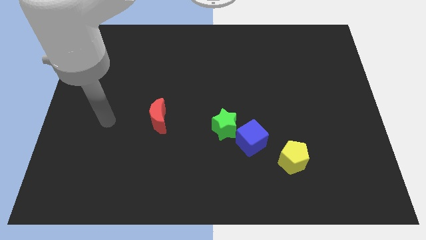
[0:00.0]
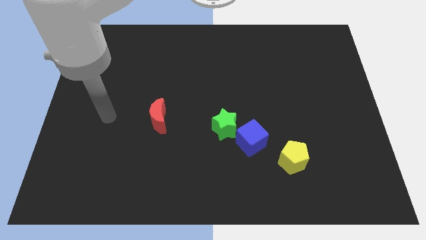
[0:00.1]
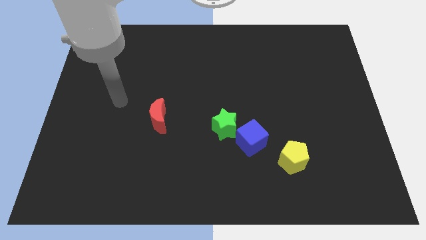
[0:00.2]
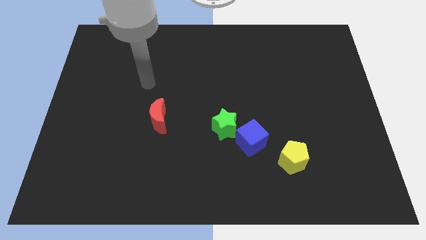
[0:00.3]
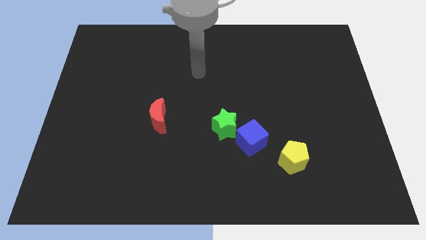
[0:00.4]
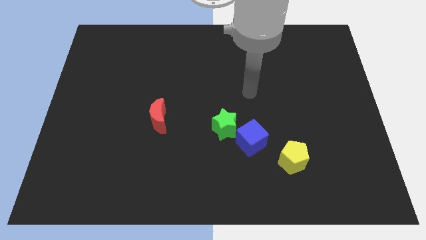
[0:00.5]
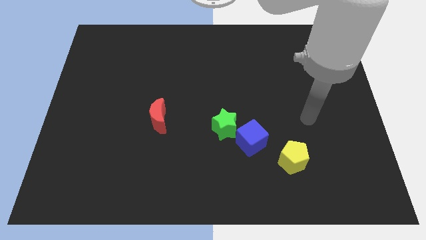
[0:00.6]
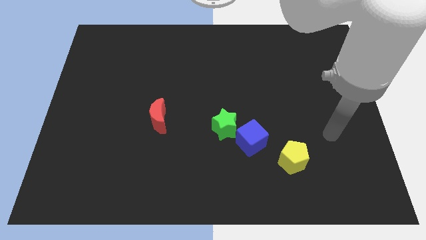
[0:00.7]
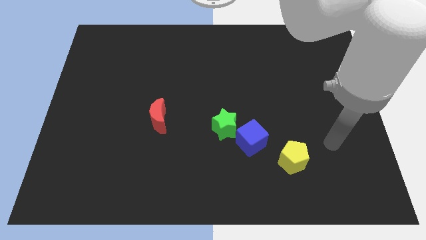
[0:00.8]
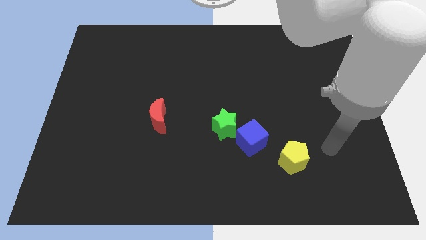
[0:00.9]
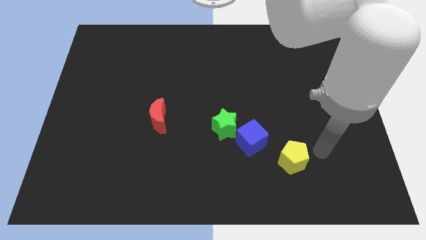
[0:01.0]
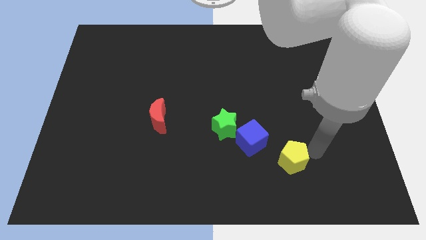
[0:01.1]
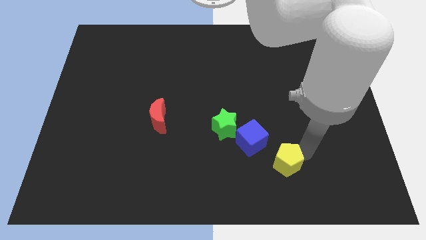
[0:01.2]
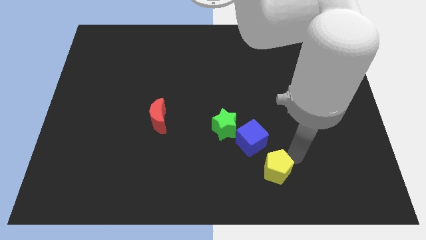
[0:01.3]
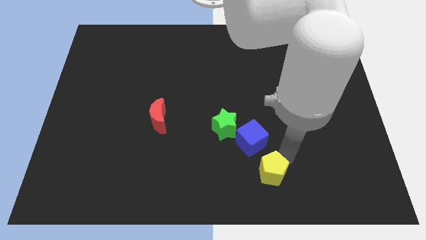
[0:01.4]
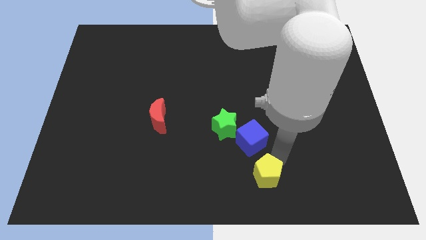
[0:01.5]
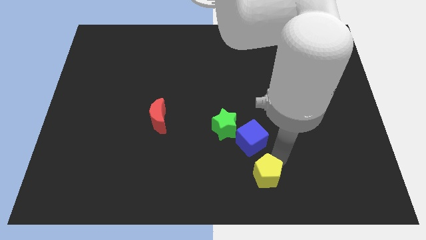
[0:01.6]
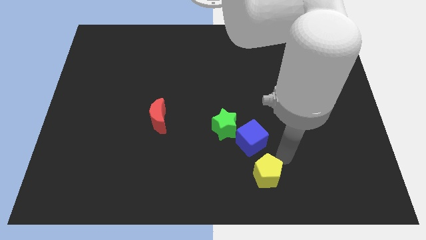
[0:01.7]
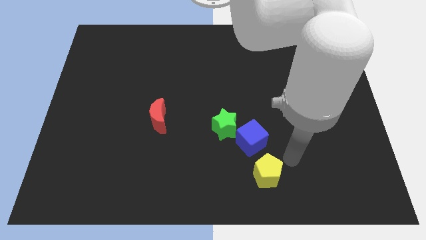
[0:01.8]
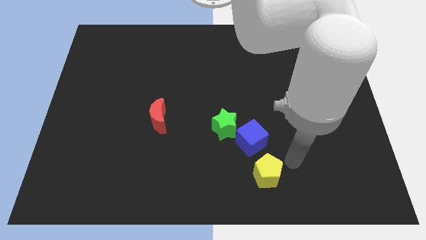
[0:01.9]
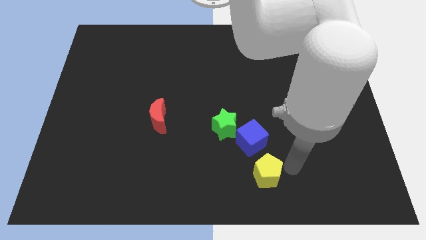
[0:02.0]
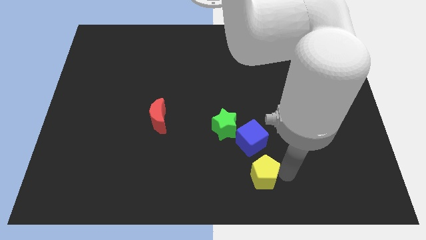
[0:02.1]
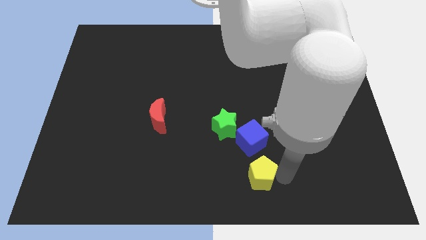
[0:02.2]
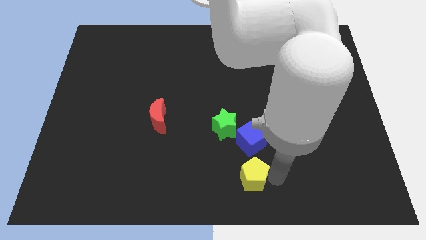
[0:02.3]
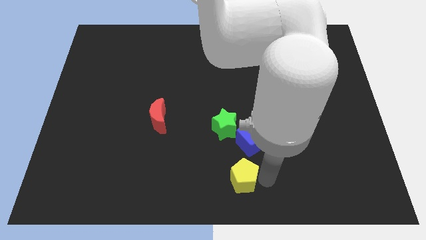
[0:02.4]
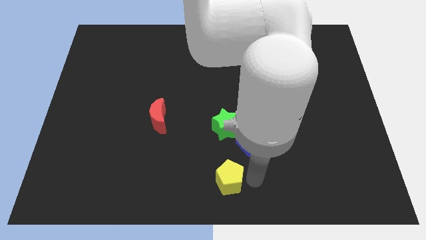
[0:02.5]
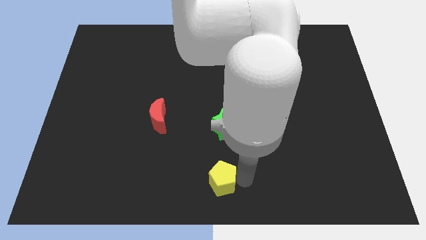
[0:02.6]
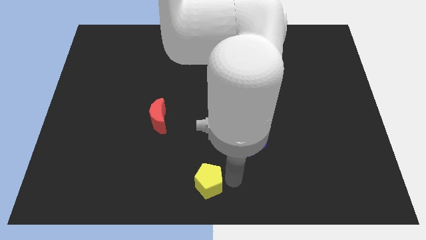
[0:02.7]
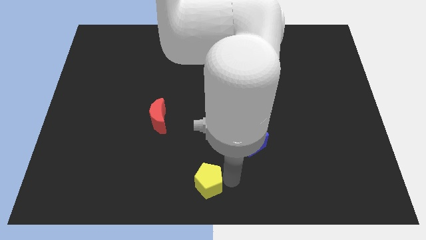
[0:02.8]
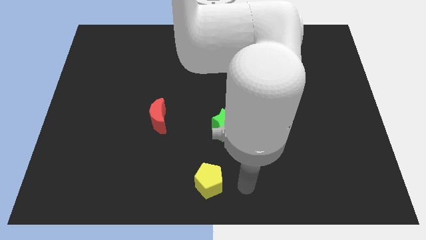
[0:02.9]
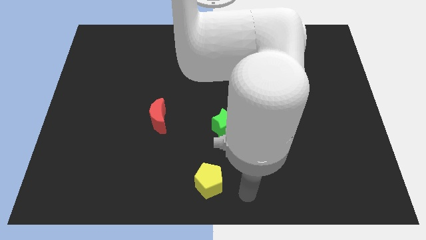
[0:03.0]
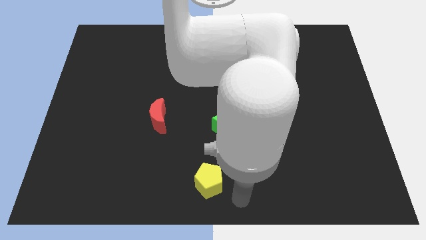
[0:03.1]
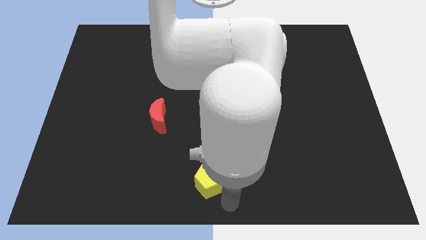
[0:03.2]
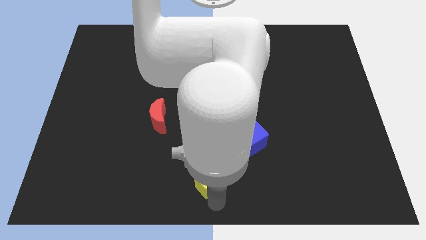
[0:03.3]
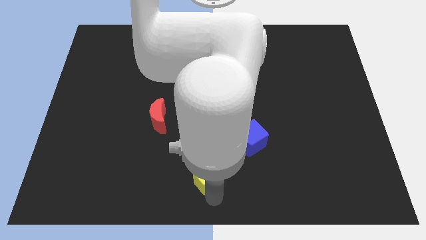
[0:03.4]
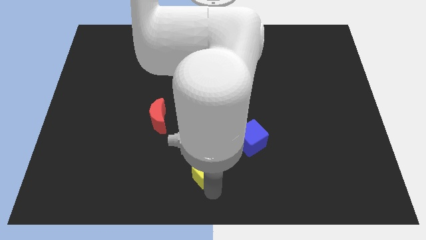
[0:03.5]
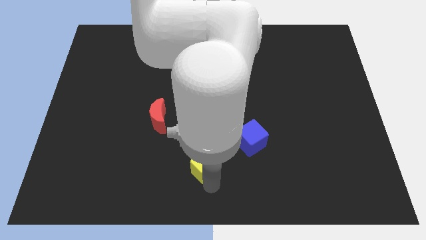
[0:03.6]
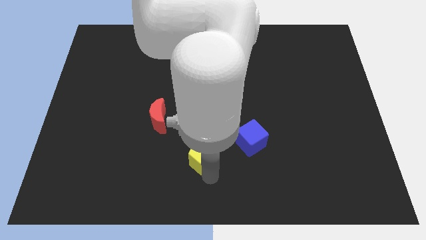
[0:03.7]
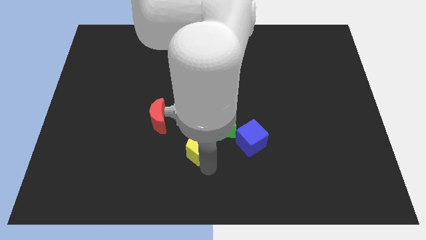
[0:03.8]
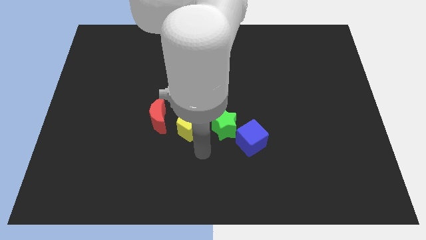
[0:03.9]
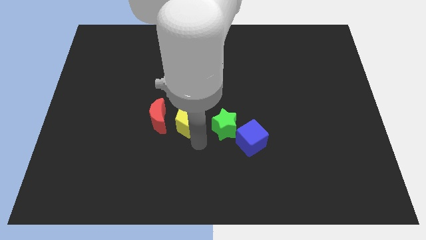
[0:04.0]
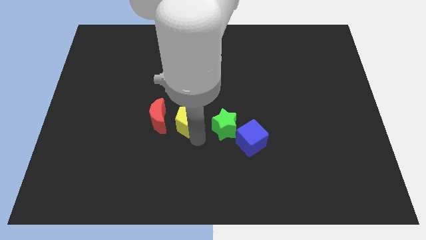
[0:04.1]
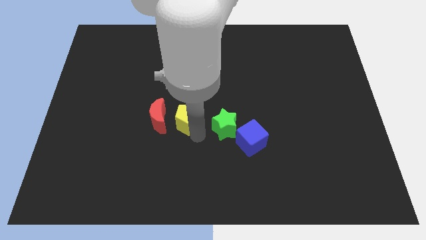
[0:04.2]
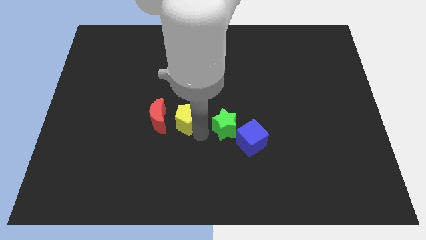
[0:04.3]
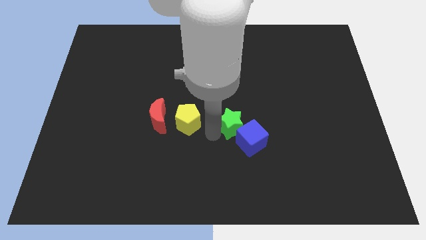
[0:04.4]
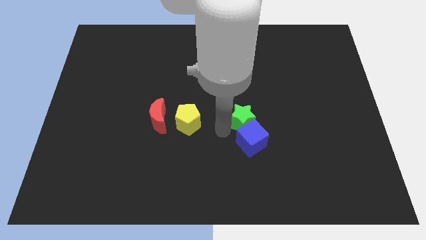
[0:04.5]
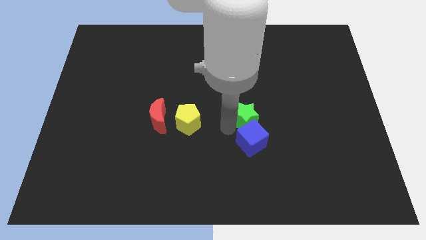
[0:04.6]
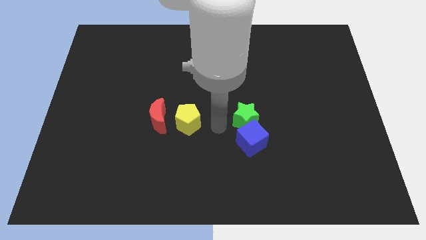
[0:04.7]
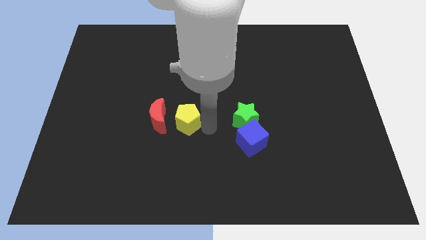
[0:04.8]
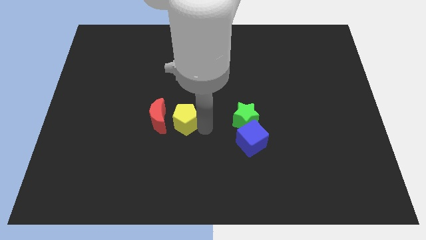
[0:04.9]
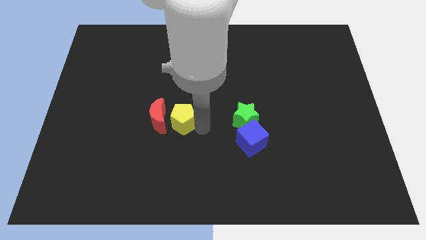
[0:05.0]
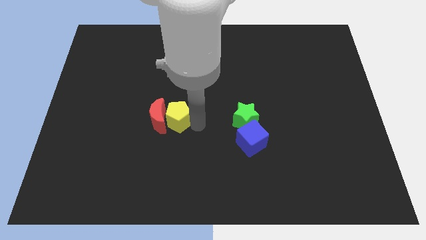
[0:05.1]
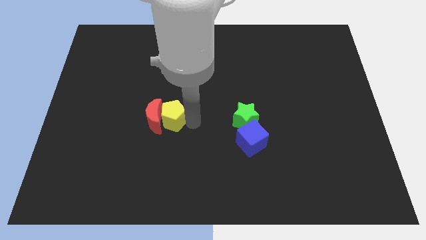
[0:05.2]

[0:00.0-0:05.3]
slide the yellow block towards the moon

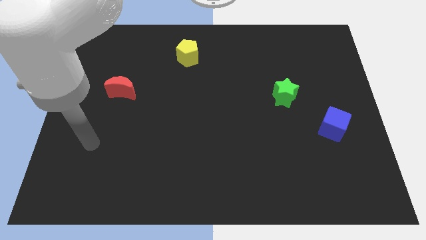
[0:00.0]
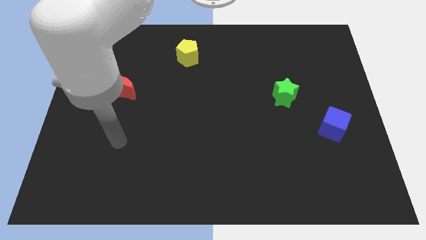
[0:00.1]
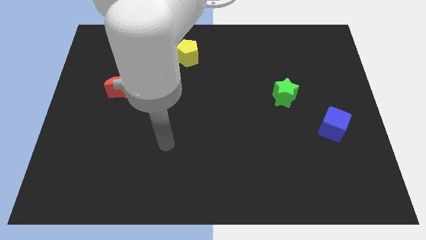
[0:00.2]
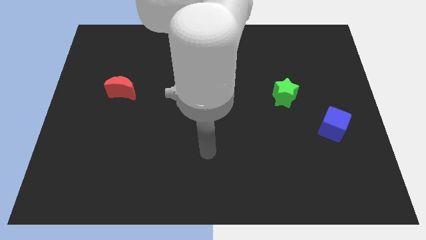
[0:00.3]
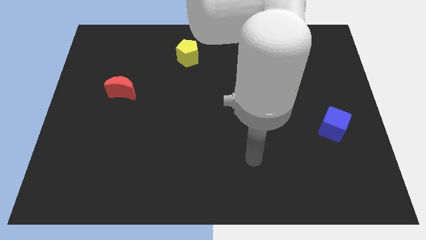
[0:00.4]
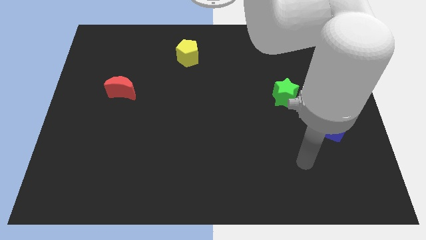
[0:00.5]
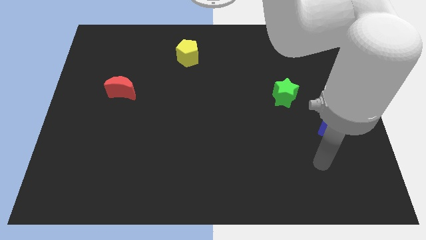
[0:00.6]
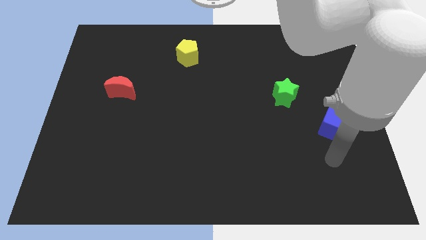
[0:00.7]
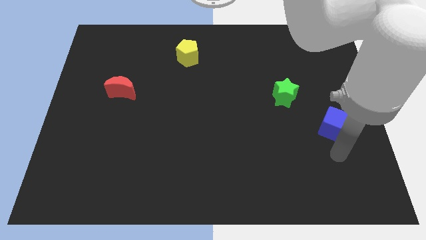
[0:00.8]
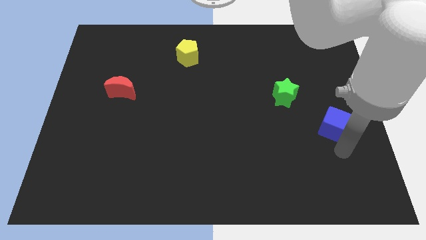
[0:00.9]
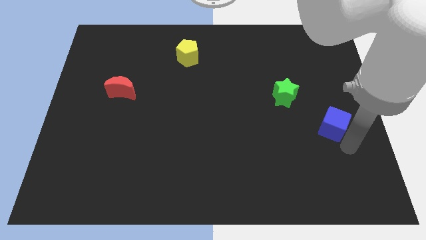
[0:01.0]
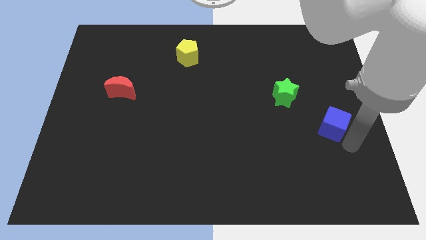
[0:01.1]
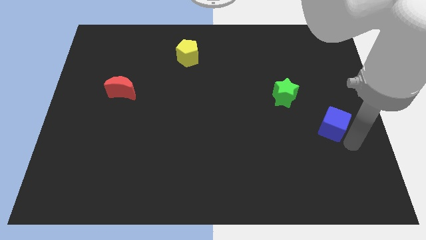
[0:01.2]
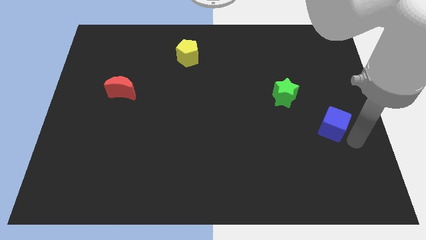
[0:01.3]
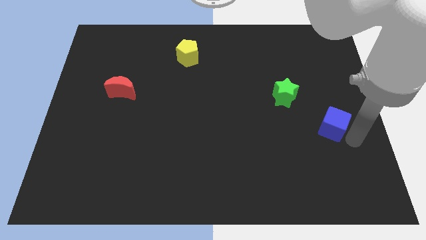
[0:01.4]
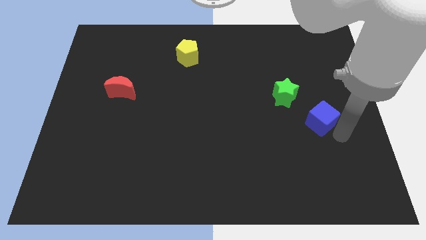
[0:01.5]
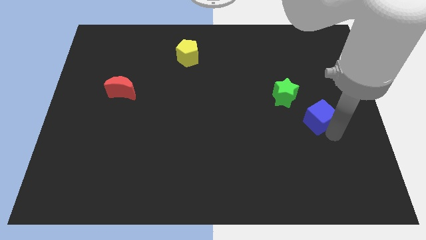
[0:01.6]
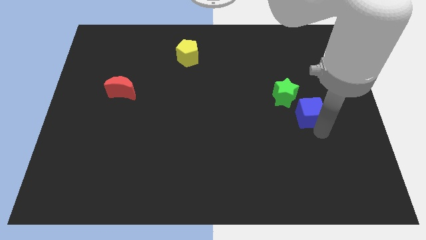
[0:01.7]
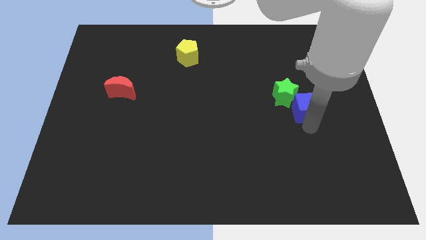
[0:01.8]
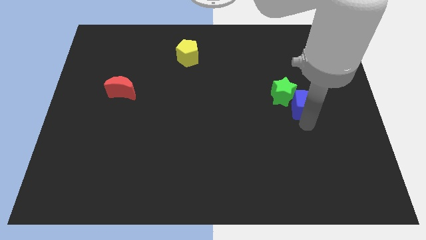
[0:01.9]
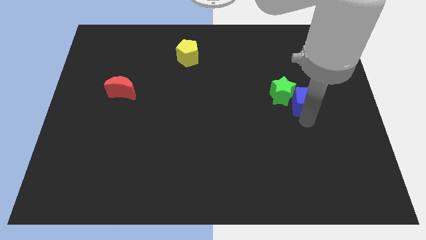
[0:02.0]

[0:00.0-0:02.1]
put the blue block close to the green block

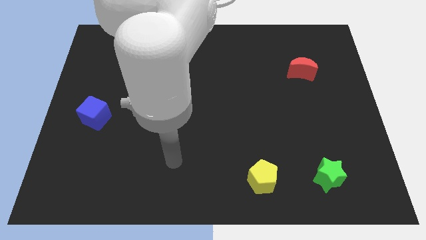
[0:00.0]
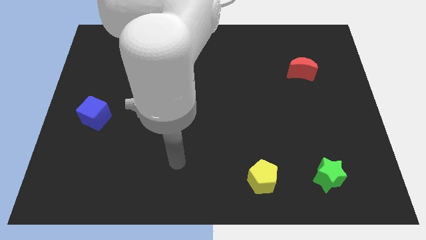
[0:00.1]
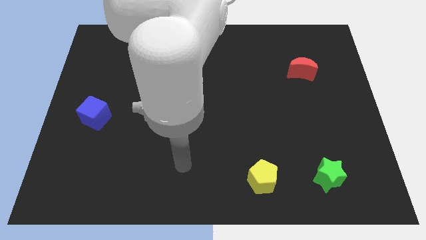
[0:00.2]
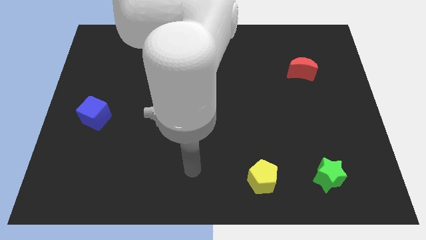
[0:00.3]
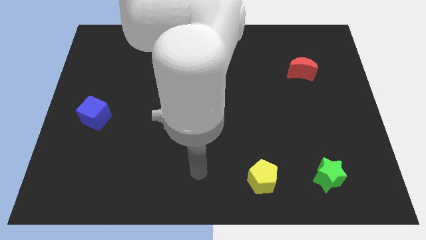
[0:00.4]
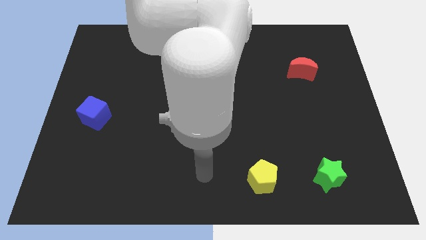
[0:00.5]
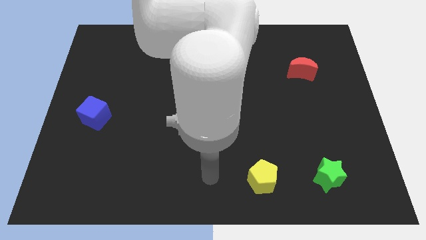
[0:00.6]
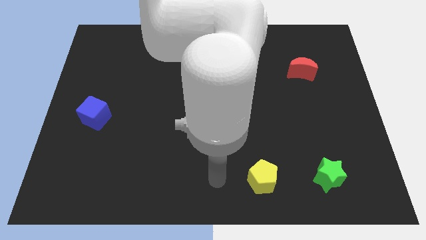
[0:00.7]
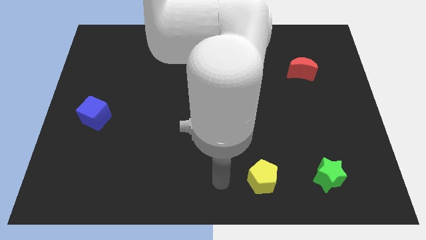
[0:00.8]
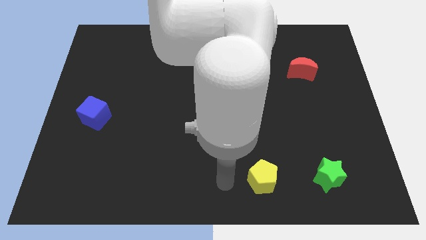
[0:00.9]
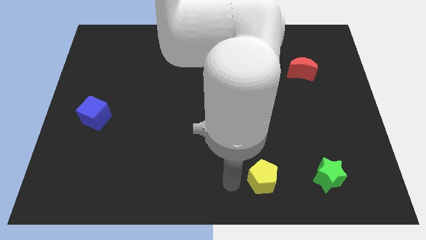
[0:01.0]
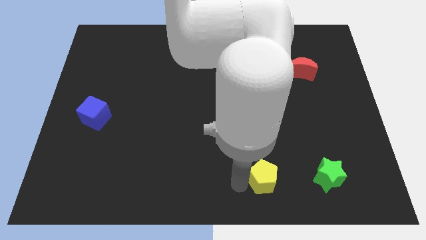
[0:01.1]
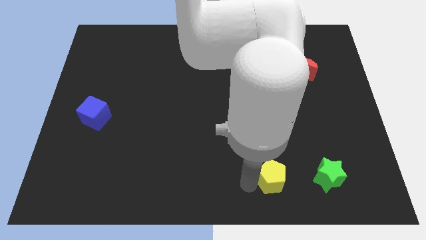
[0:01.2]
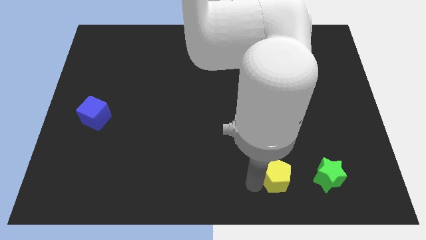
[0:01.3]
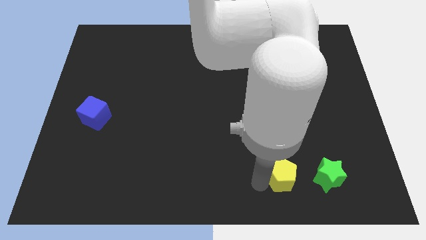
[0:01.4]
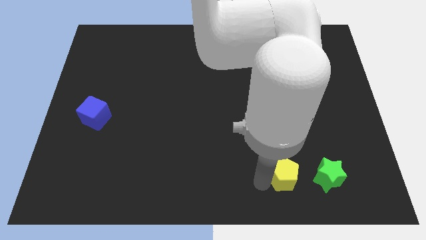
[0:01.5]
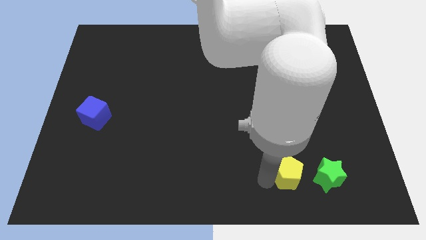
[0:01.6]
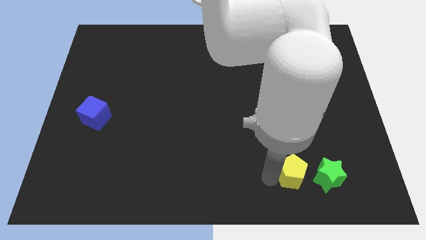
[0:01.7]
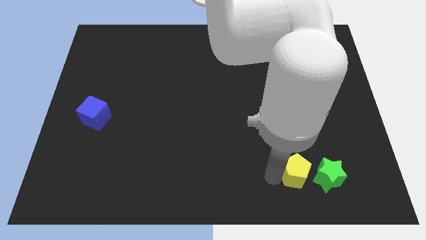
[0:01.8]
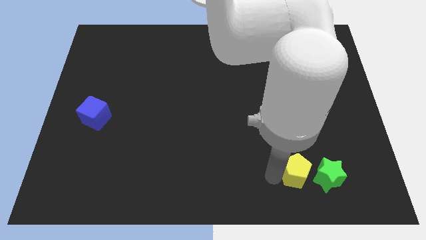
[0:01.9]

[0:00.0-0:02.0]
push the pentagon close to the green star
